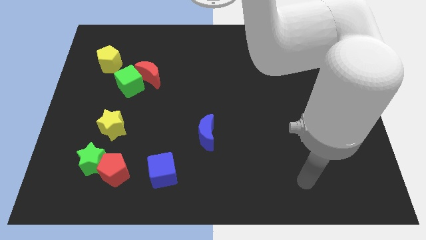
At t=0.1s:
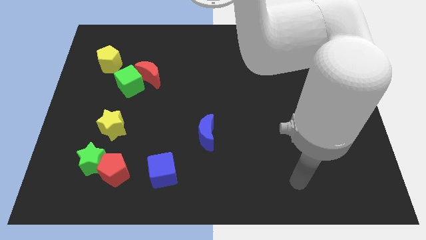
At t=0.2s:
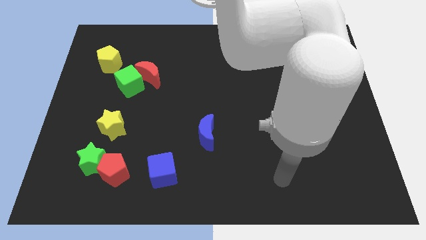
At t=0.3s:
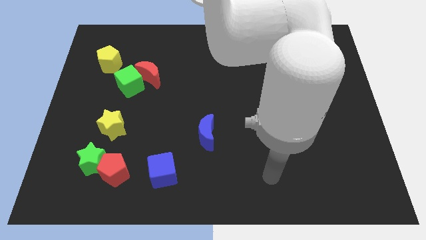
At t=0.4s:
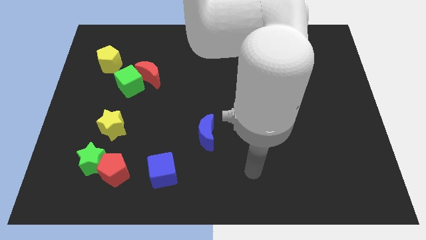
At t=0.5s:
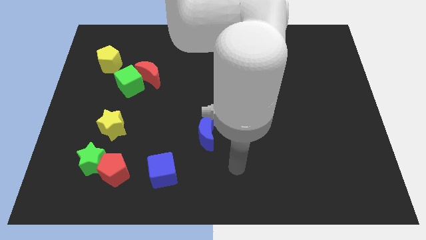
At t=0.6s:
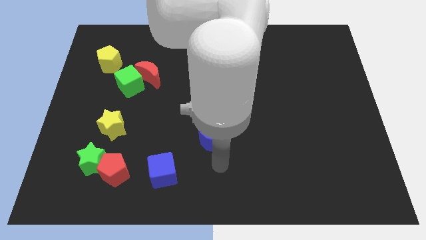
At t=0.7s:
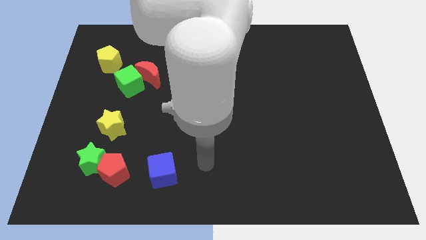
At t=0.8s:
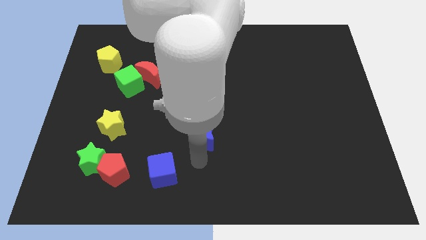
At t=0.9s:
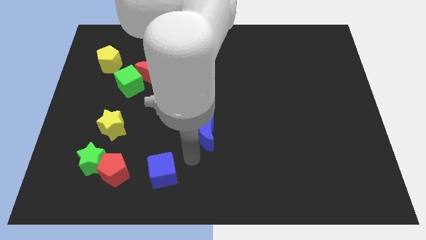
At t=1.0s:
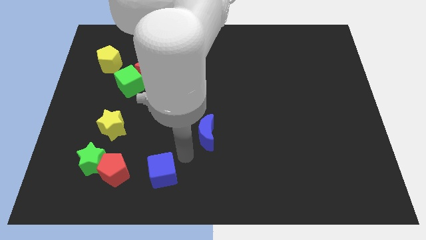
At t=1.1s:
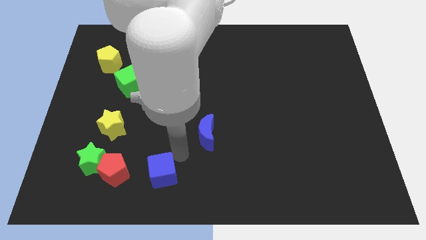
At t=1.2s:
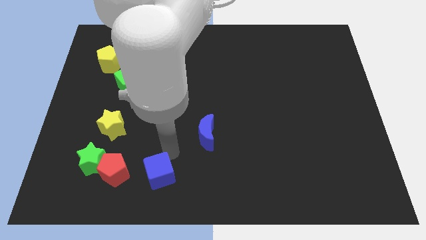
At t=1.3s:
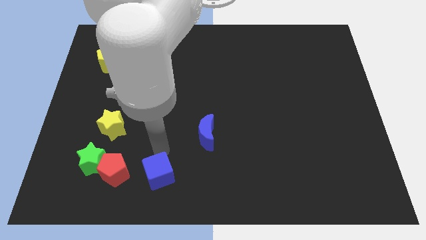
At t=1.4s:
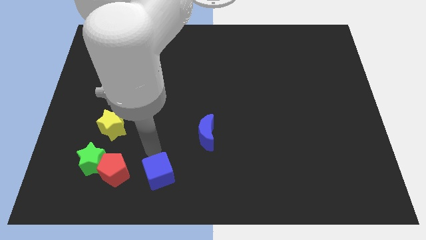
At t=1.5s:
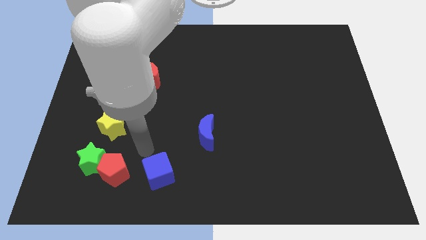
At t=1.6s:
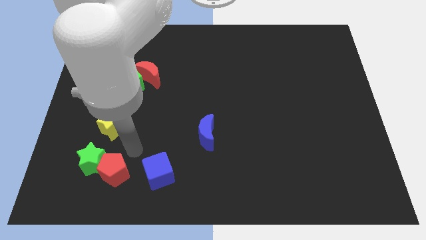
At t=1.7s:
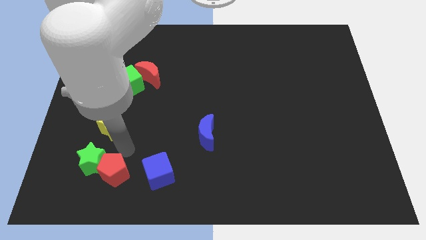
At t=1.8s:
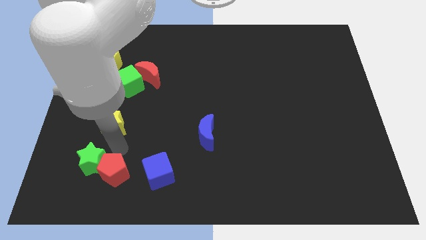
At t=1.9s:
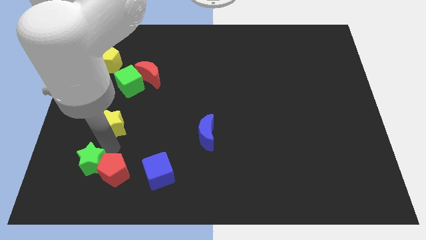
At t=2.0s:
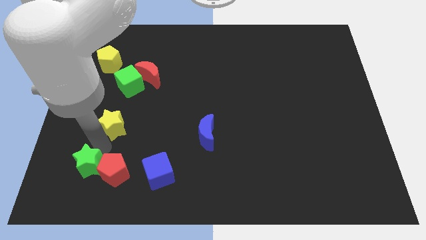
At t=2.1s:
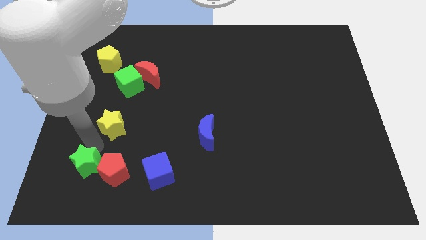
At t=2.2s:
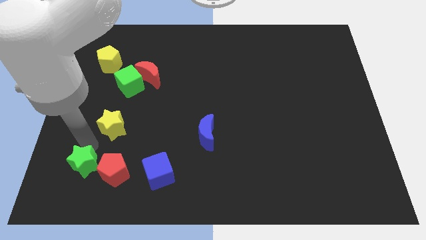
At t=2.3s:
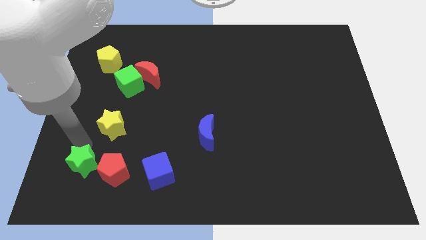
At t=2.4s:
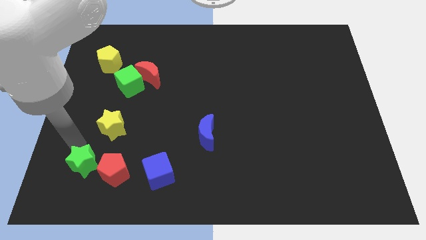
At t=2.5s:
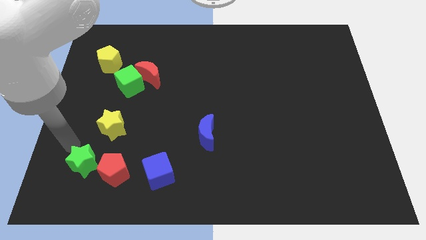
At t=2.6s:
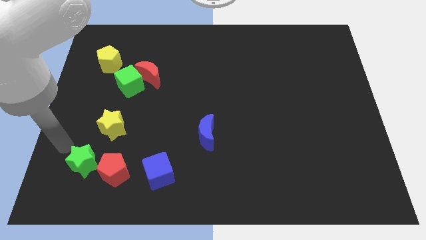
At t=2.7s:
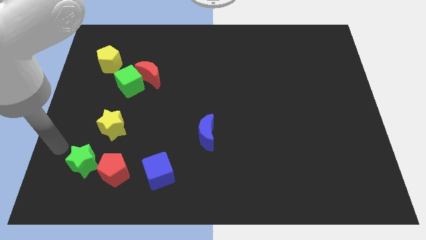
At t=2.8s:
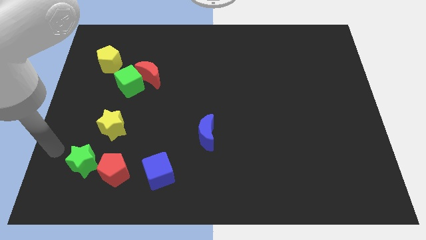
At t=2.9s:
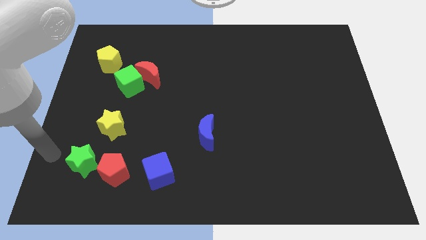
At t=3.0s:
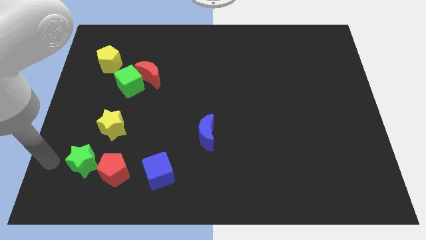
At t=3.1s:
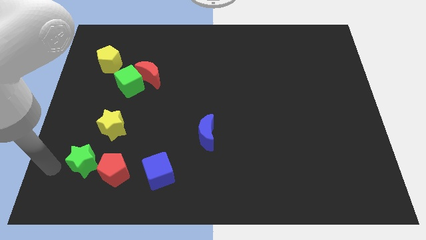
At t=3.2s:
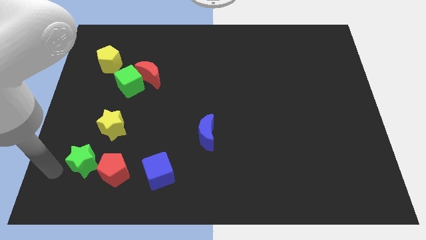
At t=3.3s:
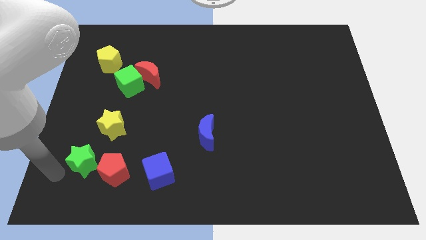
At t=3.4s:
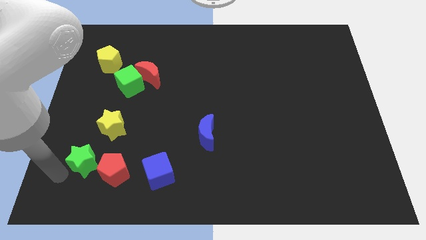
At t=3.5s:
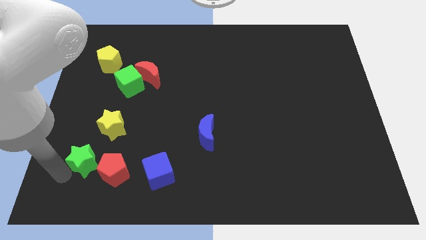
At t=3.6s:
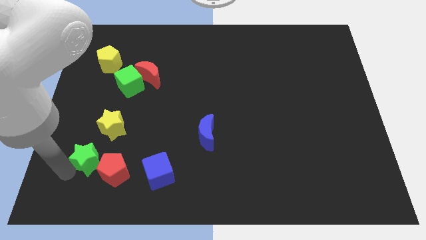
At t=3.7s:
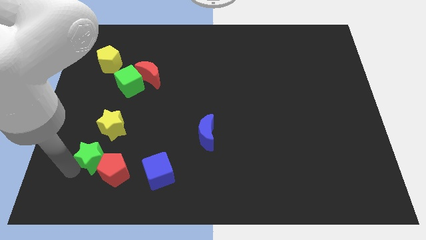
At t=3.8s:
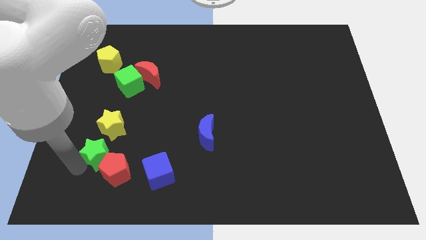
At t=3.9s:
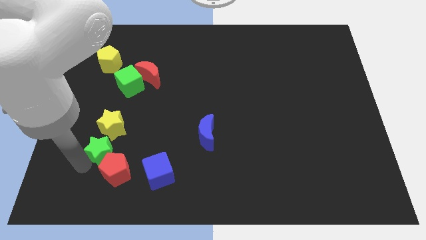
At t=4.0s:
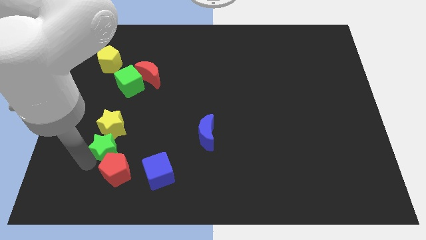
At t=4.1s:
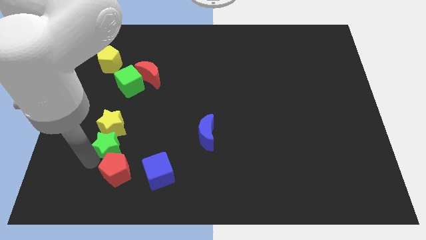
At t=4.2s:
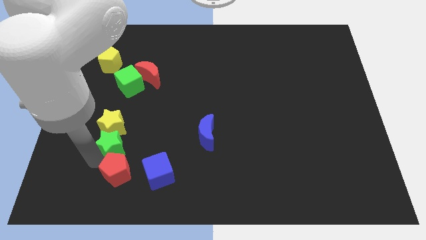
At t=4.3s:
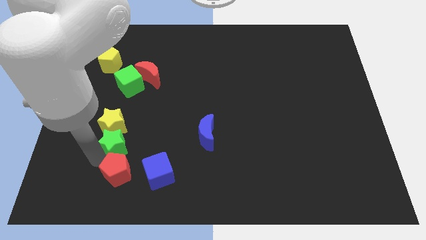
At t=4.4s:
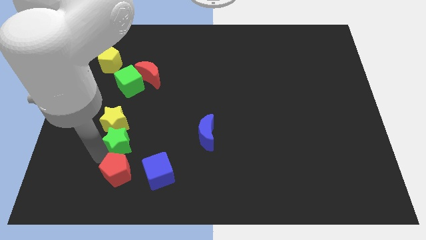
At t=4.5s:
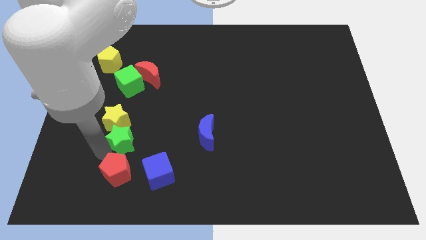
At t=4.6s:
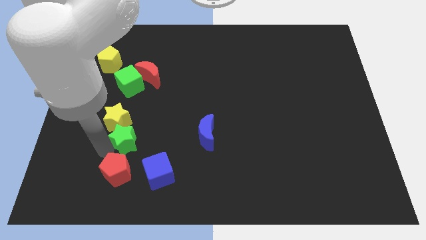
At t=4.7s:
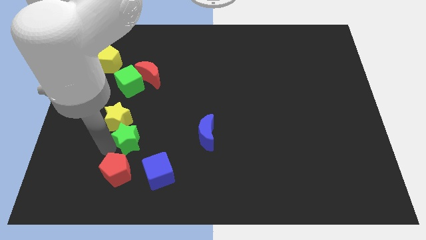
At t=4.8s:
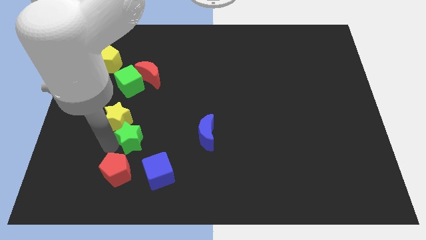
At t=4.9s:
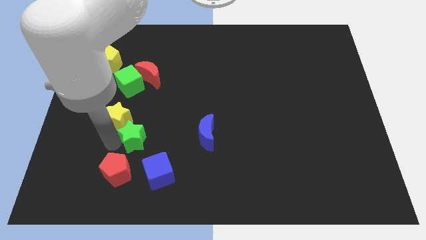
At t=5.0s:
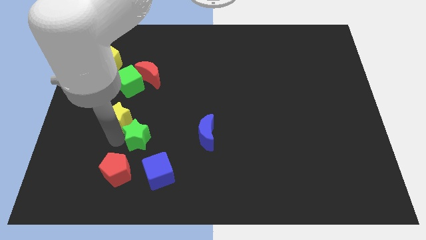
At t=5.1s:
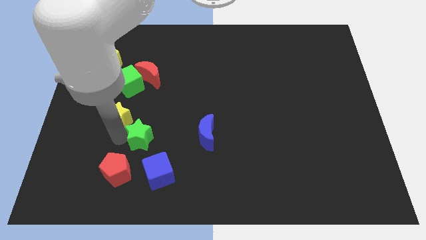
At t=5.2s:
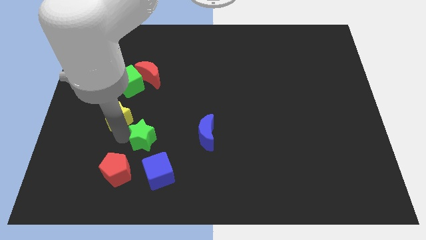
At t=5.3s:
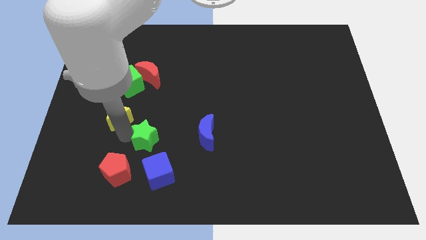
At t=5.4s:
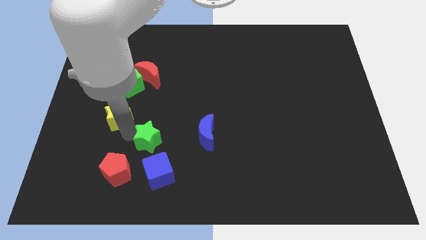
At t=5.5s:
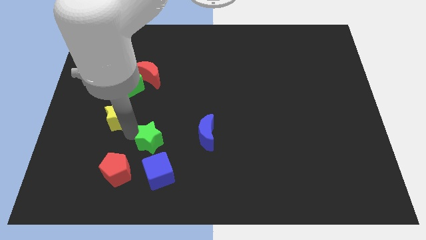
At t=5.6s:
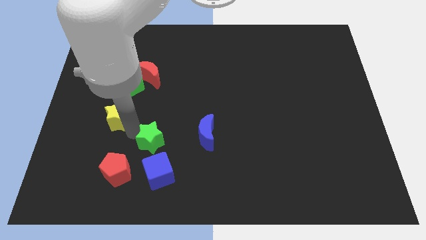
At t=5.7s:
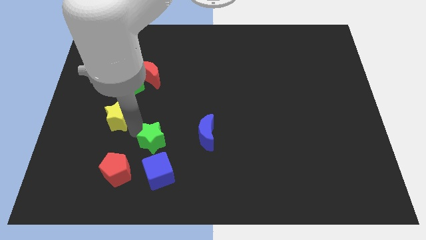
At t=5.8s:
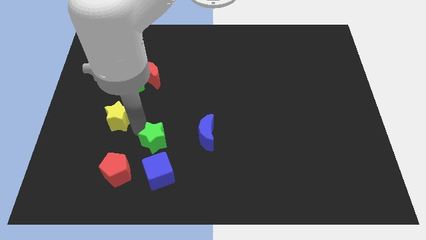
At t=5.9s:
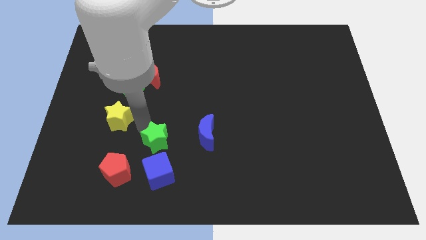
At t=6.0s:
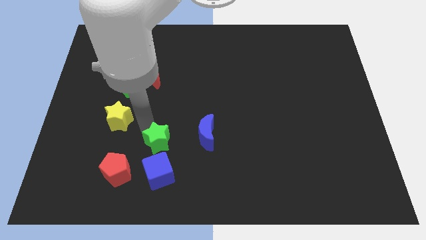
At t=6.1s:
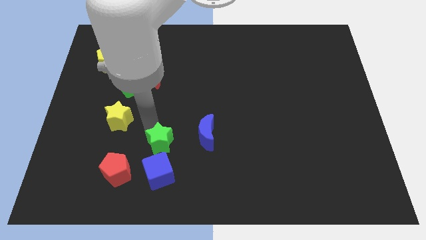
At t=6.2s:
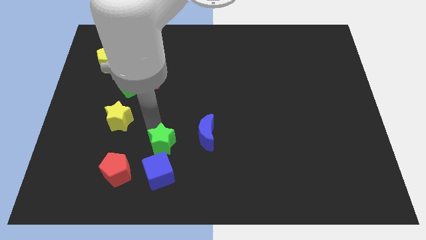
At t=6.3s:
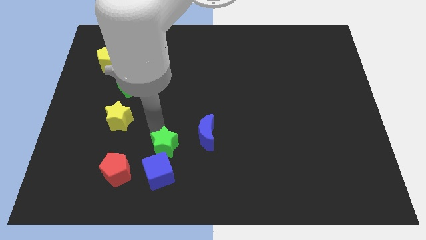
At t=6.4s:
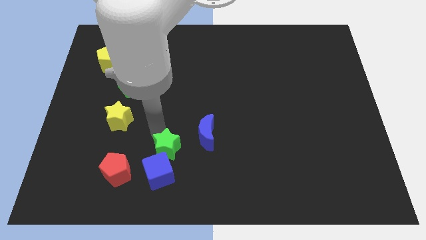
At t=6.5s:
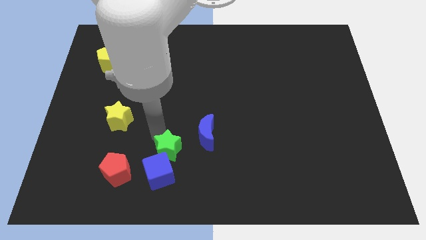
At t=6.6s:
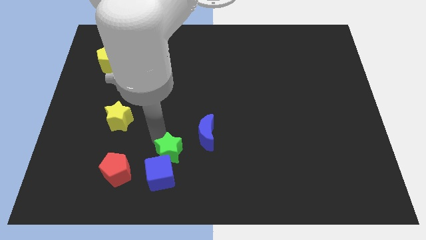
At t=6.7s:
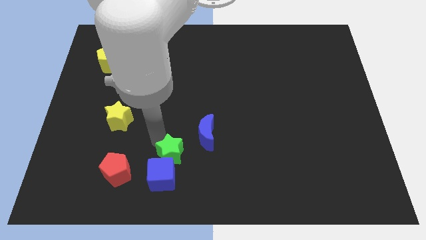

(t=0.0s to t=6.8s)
push the green star next to the blue cube

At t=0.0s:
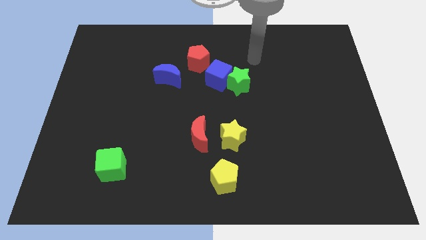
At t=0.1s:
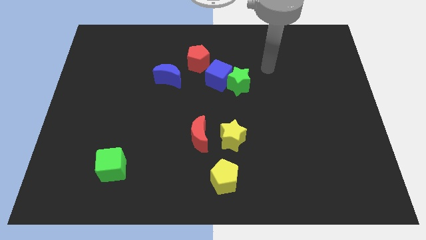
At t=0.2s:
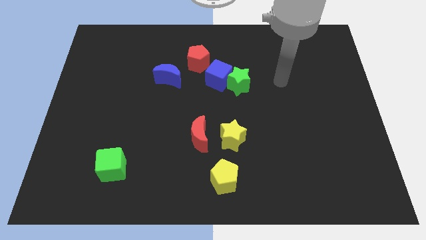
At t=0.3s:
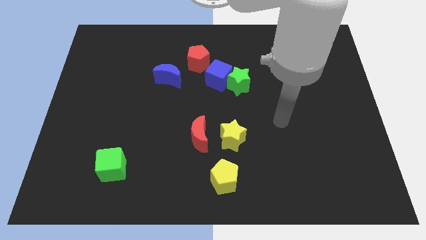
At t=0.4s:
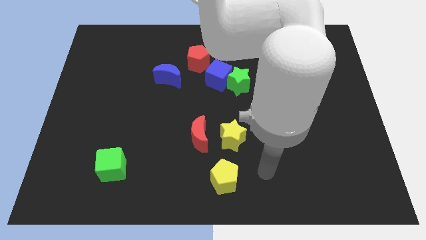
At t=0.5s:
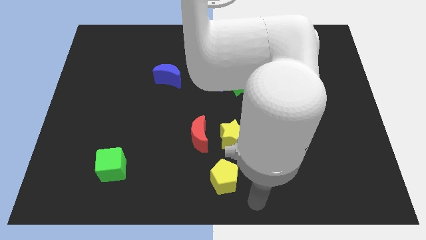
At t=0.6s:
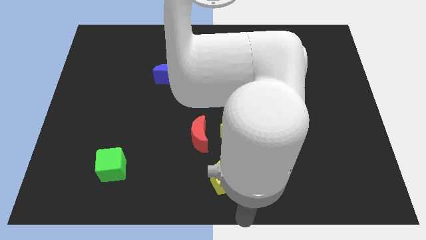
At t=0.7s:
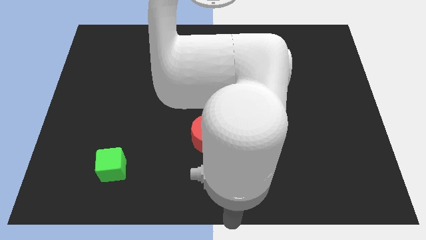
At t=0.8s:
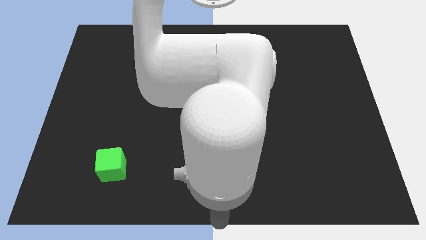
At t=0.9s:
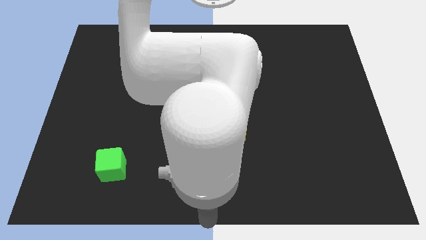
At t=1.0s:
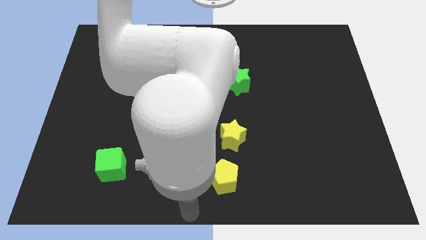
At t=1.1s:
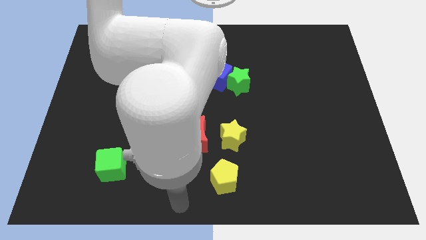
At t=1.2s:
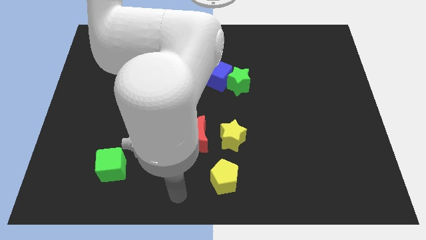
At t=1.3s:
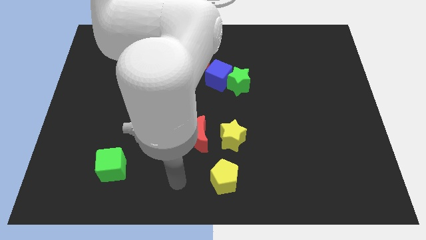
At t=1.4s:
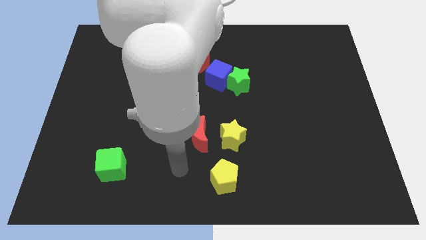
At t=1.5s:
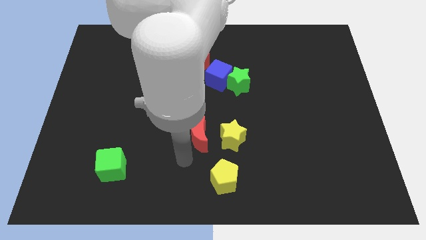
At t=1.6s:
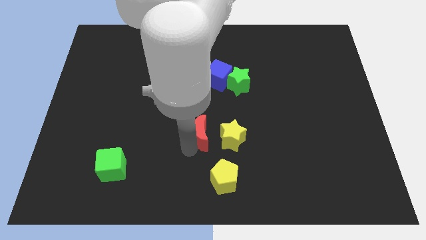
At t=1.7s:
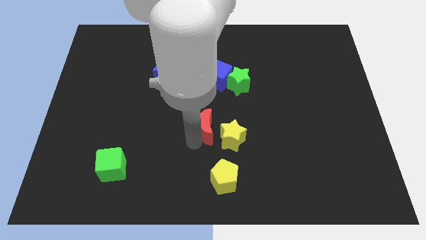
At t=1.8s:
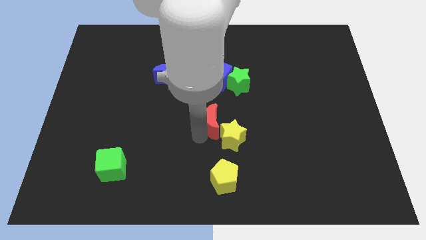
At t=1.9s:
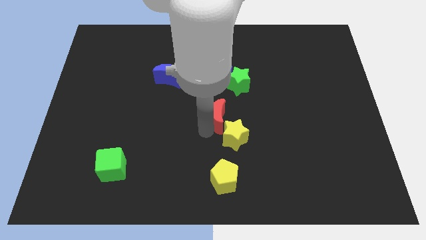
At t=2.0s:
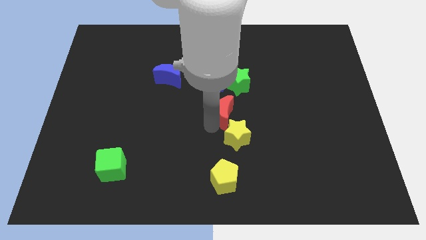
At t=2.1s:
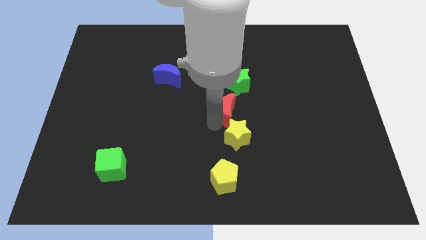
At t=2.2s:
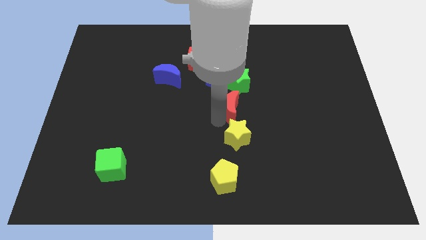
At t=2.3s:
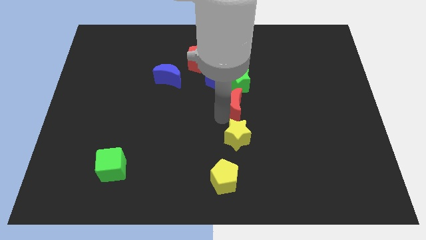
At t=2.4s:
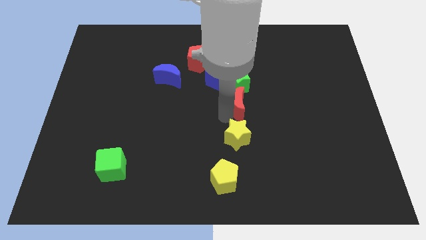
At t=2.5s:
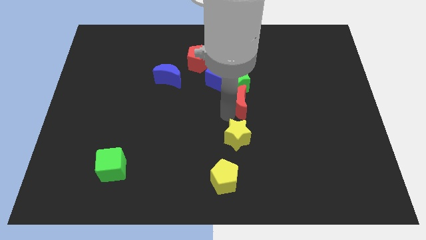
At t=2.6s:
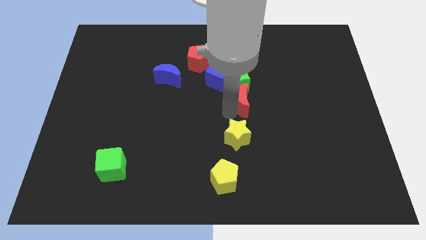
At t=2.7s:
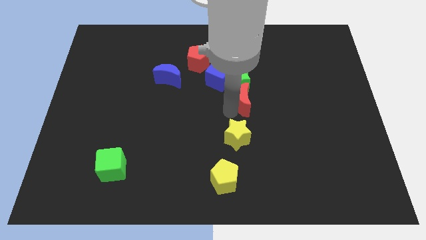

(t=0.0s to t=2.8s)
move the red moon to the green star
